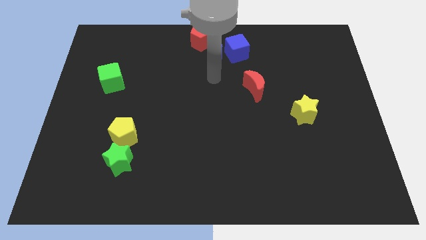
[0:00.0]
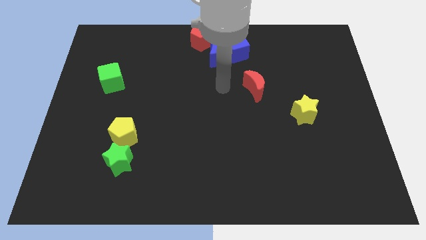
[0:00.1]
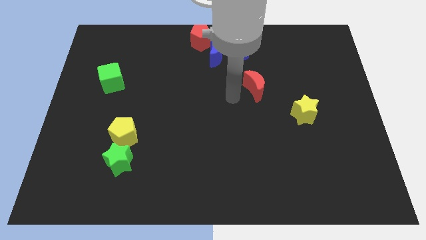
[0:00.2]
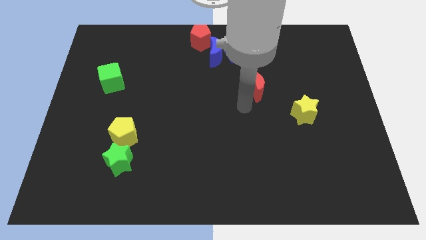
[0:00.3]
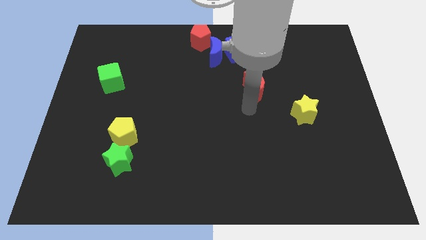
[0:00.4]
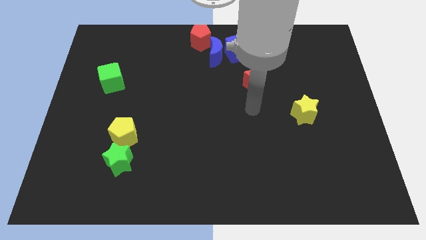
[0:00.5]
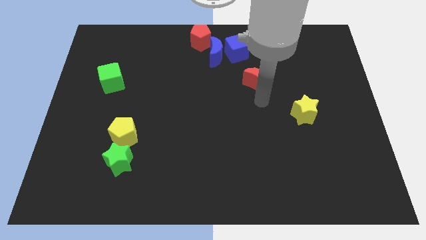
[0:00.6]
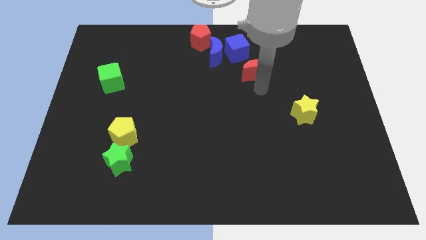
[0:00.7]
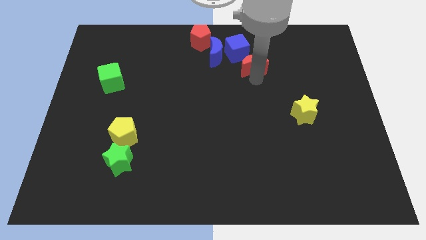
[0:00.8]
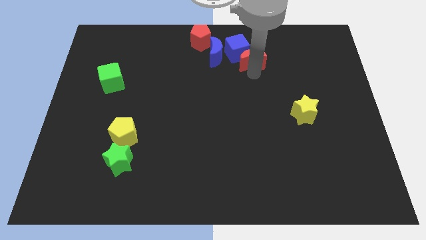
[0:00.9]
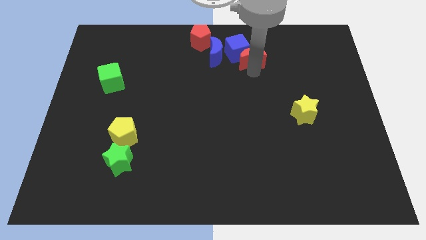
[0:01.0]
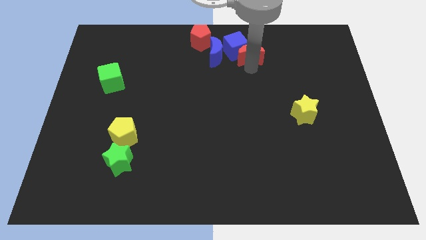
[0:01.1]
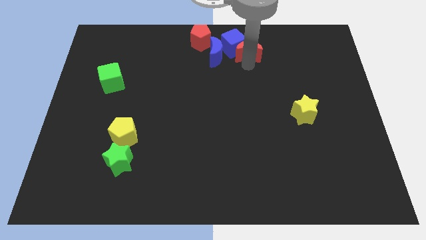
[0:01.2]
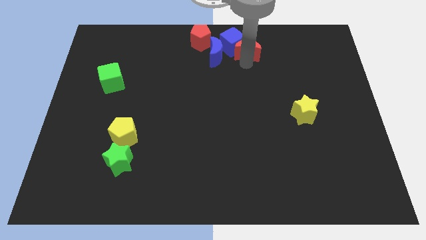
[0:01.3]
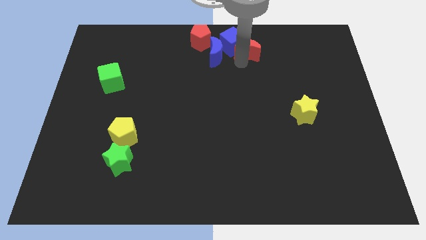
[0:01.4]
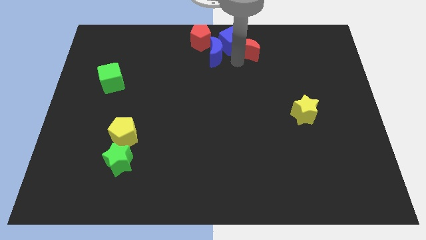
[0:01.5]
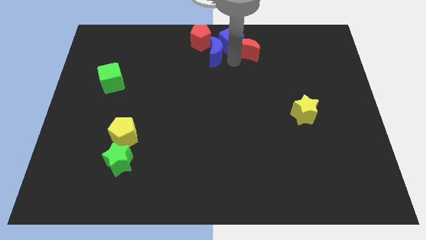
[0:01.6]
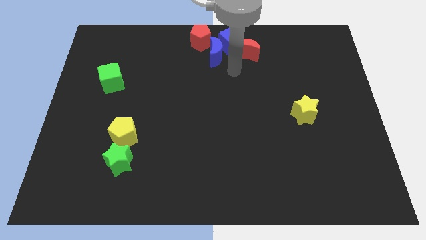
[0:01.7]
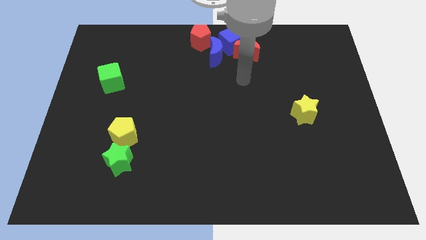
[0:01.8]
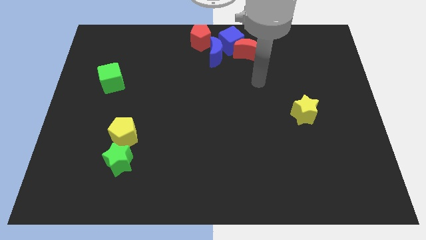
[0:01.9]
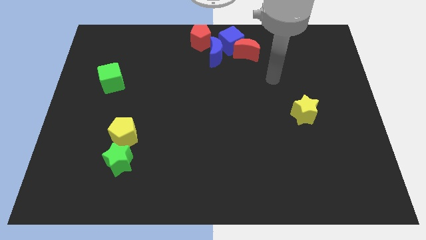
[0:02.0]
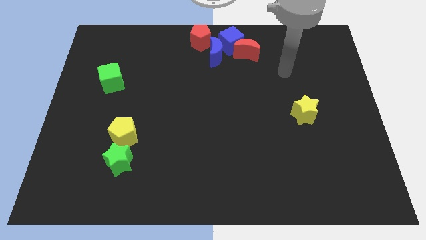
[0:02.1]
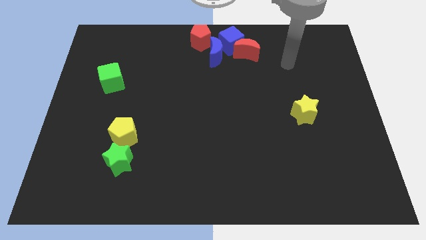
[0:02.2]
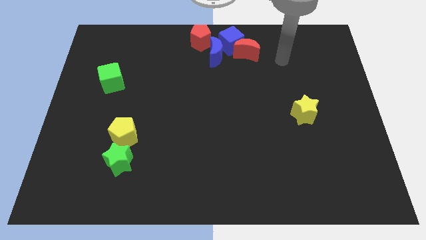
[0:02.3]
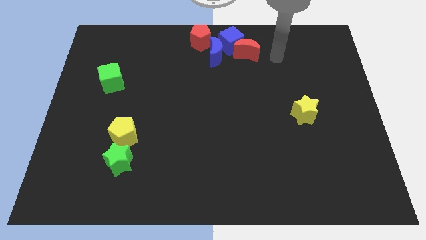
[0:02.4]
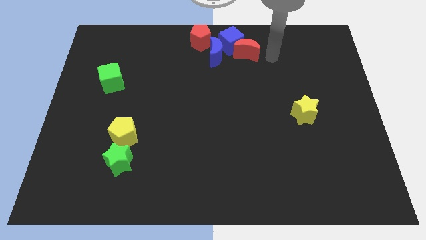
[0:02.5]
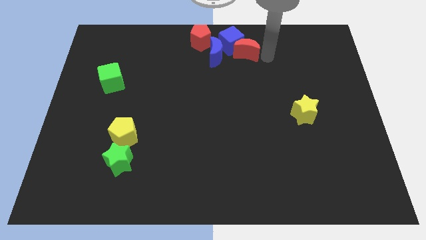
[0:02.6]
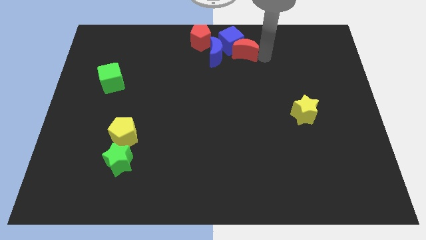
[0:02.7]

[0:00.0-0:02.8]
place red moon to the right of blue moon

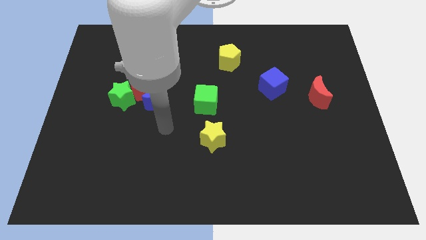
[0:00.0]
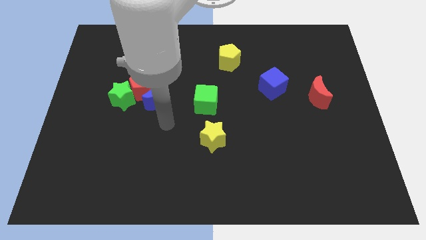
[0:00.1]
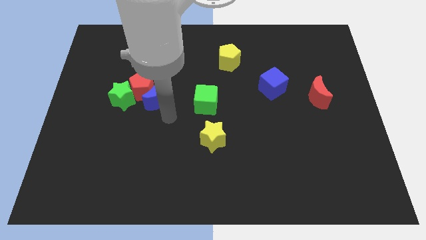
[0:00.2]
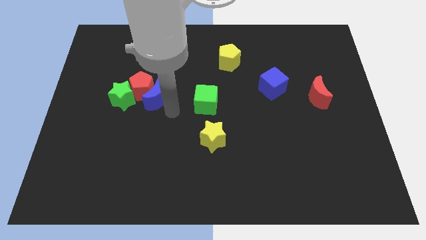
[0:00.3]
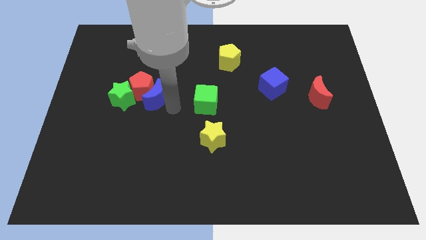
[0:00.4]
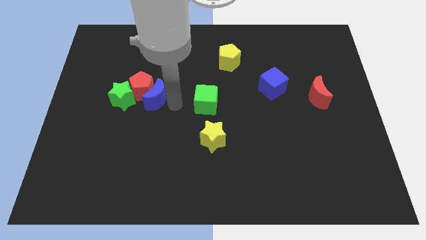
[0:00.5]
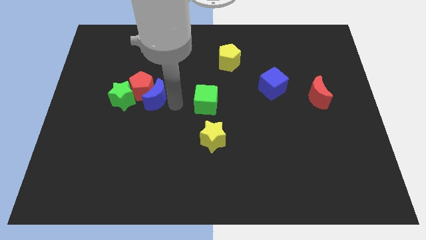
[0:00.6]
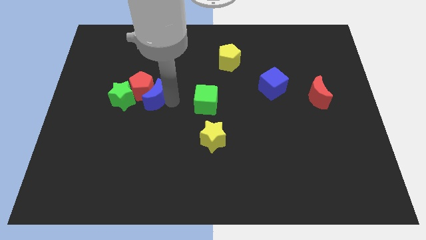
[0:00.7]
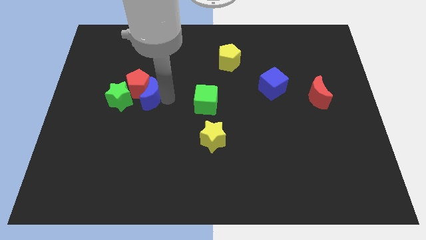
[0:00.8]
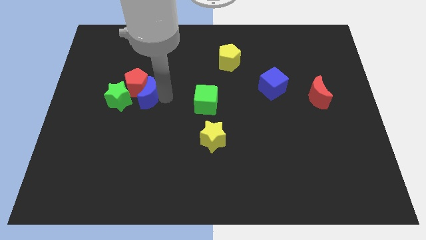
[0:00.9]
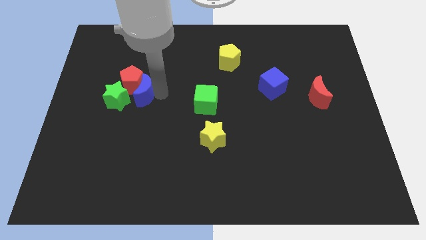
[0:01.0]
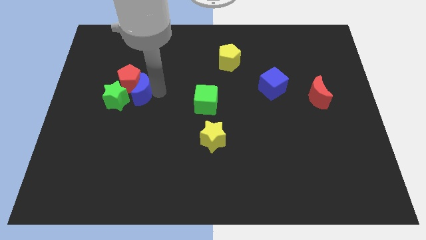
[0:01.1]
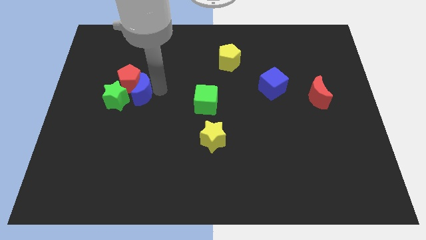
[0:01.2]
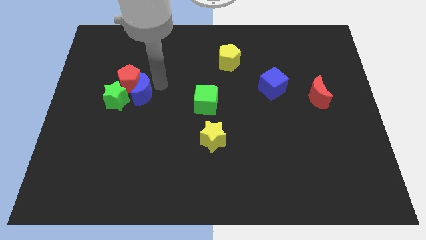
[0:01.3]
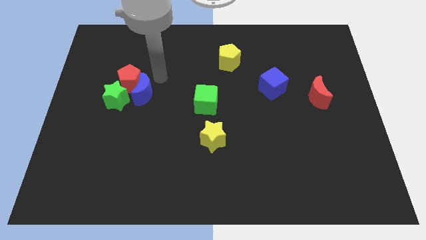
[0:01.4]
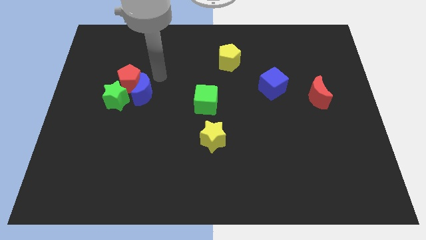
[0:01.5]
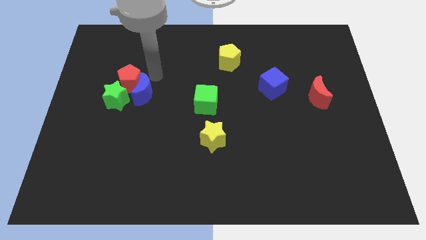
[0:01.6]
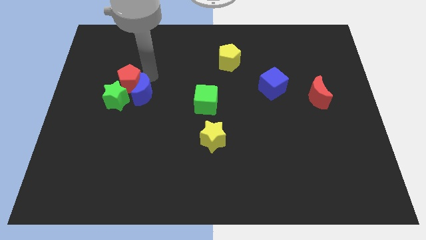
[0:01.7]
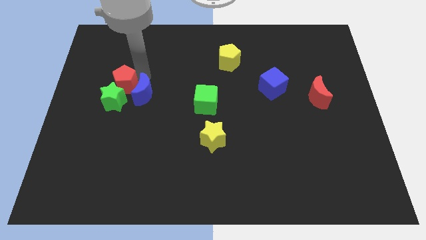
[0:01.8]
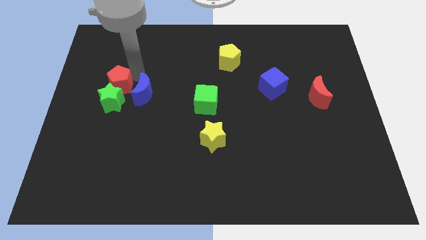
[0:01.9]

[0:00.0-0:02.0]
push the blue moon into the red pentagon

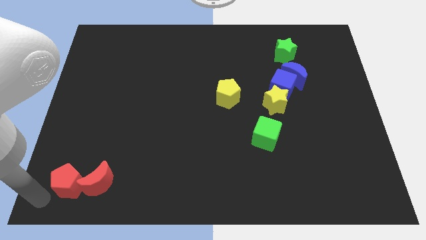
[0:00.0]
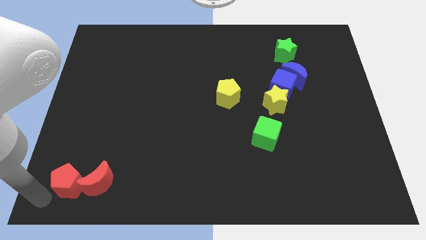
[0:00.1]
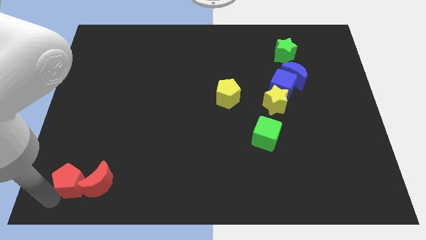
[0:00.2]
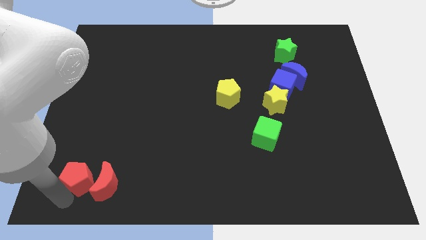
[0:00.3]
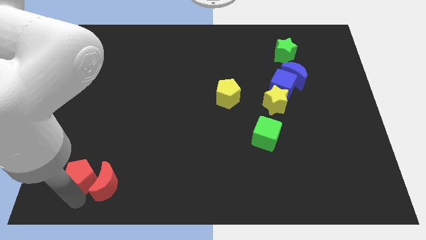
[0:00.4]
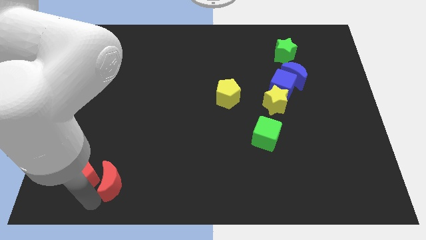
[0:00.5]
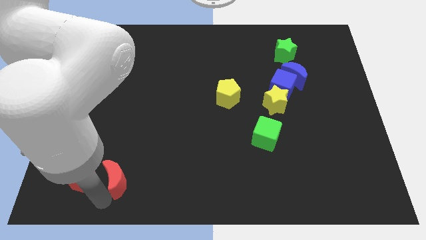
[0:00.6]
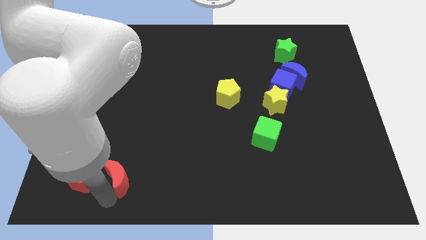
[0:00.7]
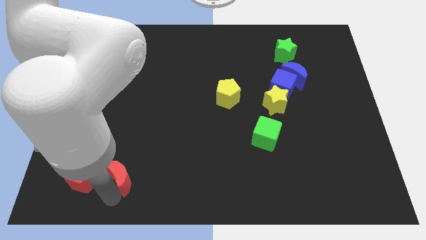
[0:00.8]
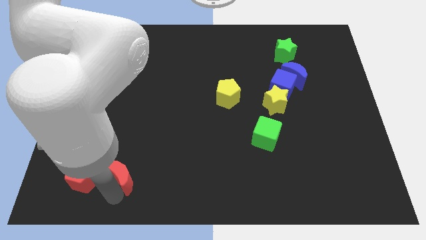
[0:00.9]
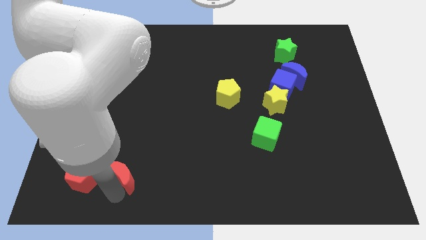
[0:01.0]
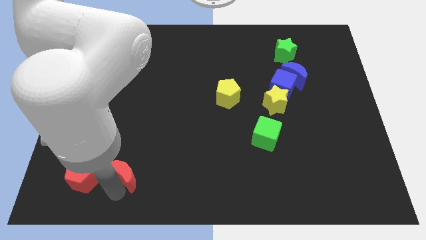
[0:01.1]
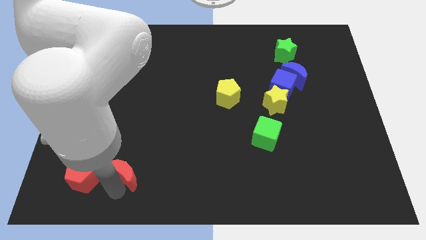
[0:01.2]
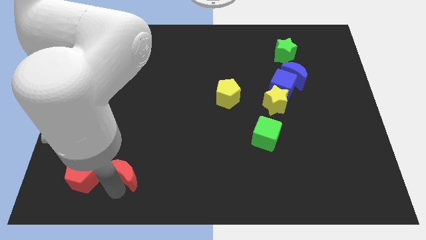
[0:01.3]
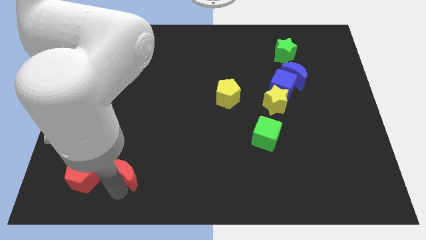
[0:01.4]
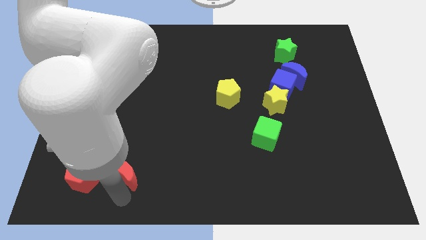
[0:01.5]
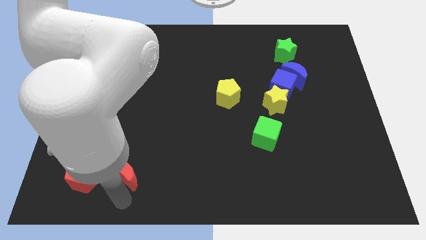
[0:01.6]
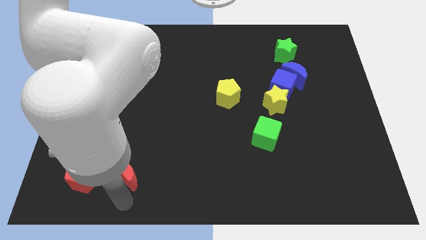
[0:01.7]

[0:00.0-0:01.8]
separate the red moon from the red pentagon

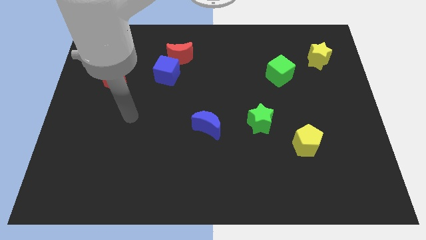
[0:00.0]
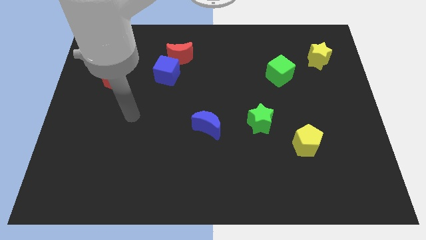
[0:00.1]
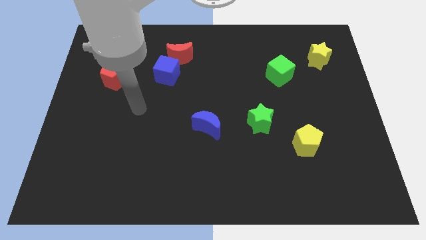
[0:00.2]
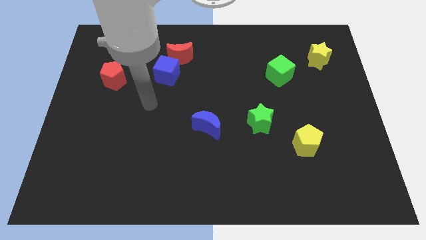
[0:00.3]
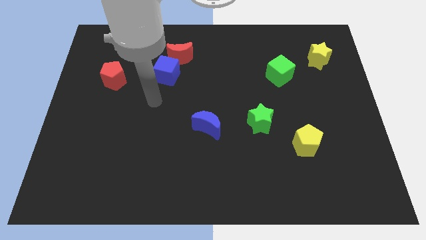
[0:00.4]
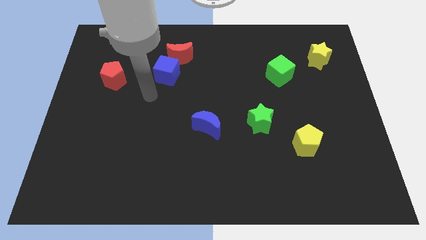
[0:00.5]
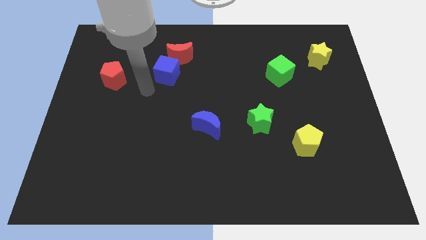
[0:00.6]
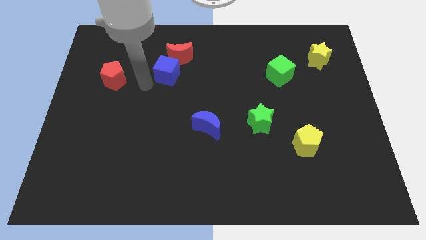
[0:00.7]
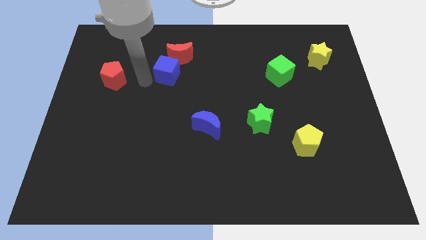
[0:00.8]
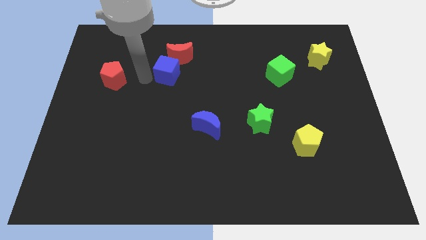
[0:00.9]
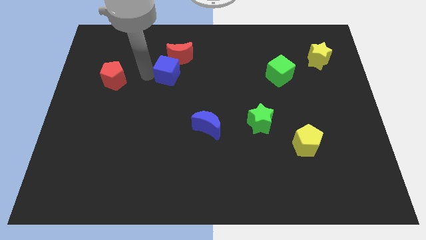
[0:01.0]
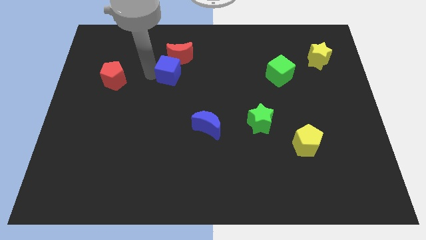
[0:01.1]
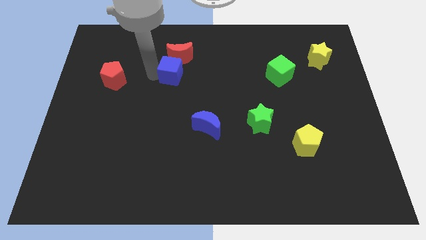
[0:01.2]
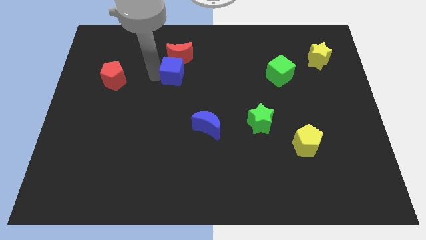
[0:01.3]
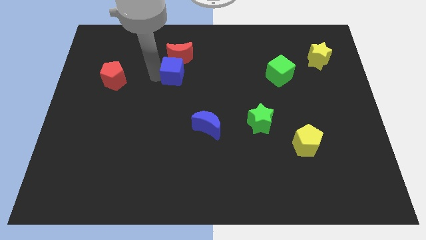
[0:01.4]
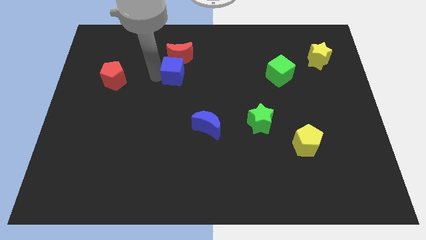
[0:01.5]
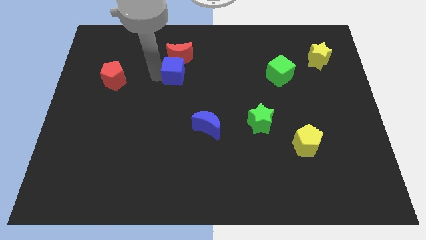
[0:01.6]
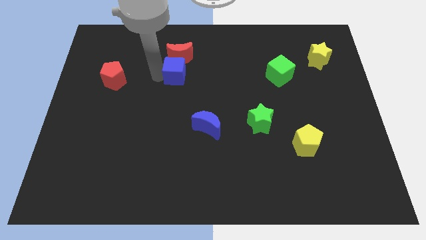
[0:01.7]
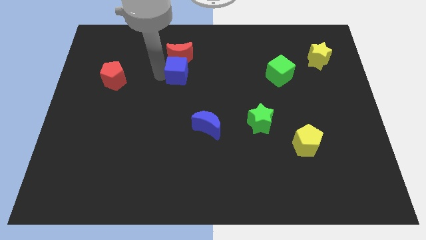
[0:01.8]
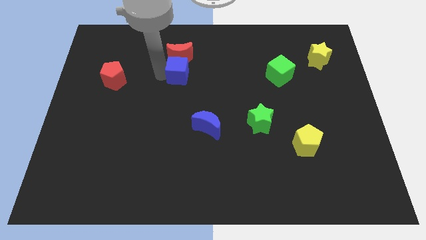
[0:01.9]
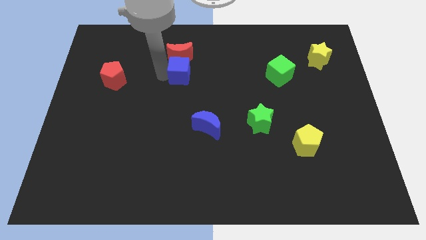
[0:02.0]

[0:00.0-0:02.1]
push the blue cube at the bottom of the red moon

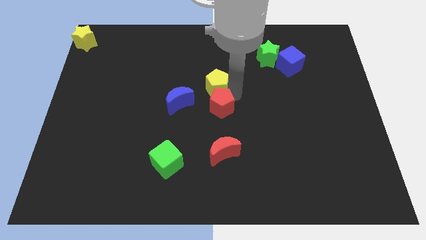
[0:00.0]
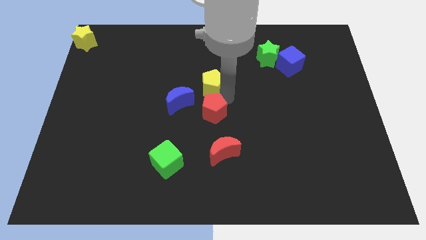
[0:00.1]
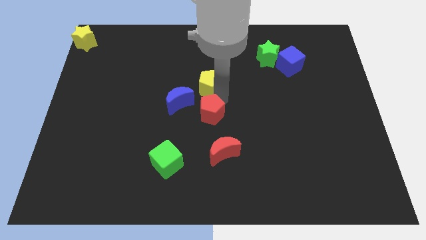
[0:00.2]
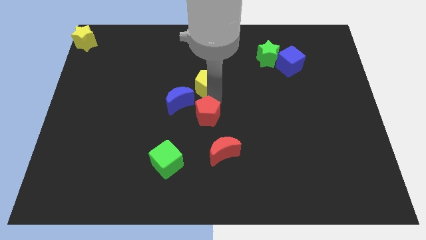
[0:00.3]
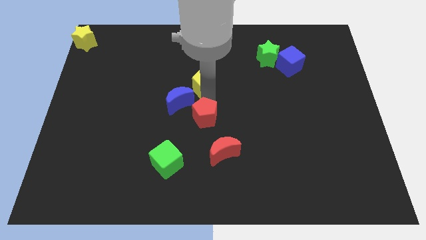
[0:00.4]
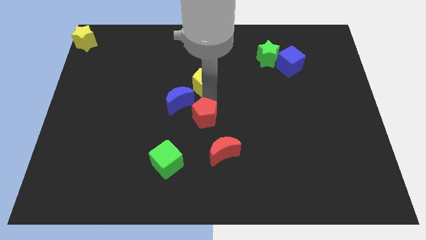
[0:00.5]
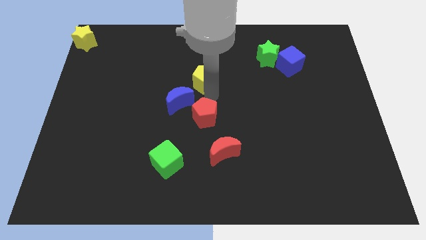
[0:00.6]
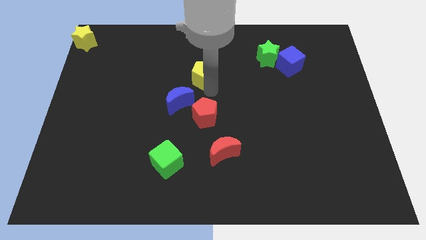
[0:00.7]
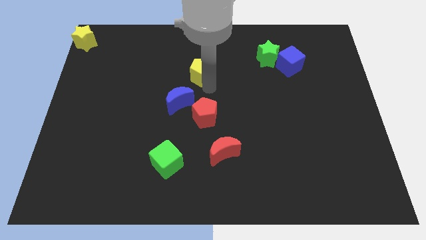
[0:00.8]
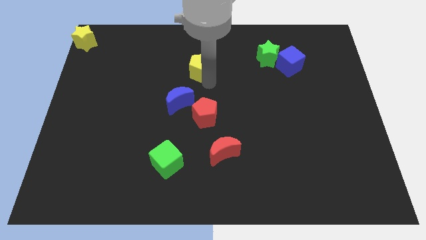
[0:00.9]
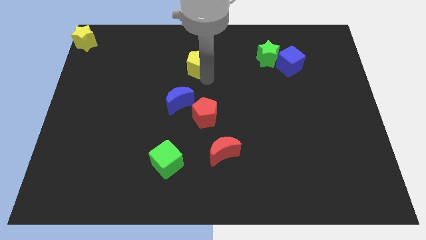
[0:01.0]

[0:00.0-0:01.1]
separate the yellow pentagon from the red pentagon
